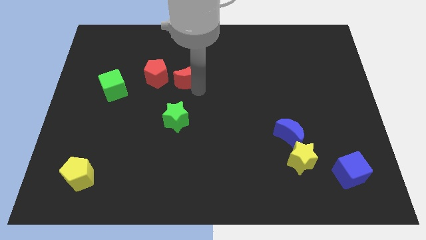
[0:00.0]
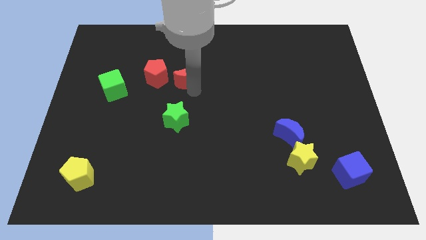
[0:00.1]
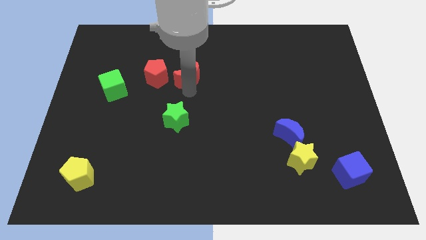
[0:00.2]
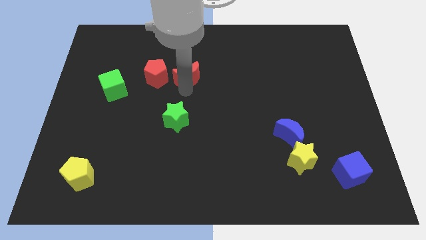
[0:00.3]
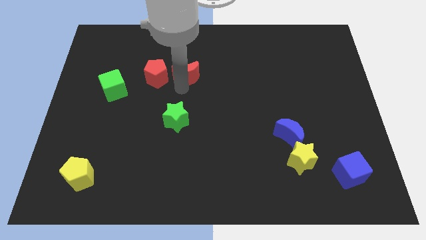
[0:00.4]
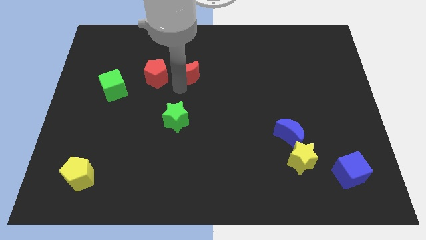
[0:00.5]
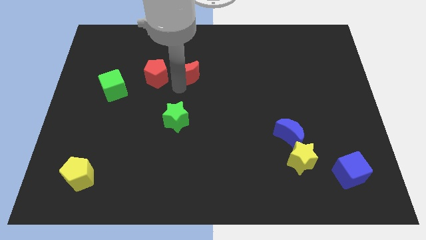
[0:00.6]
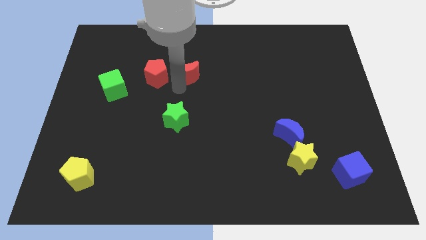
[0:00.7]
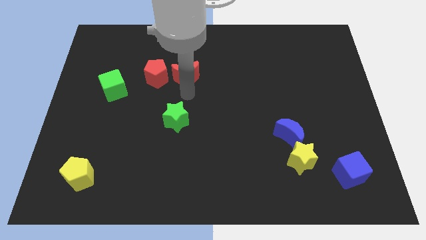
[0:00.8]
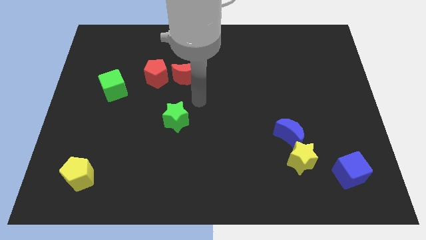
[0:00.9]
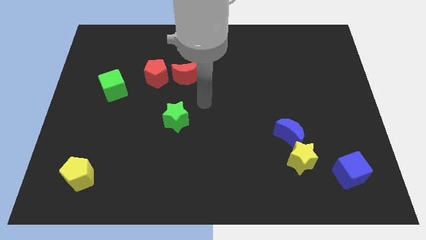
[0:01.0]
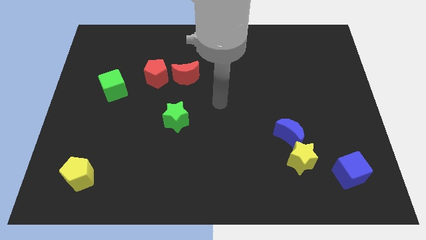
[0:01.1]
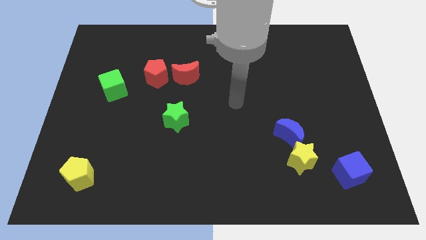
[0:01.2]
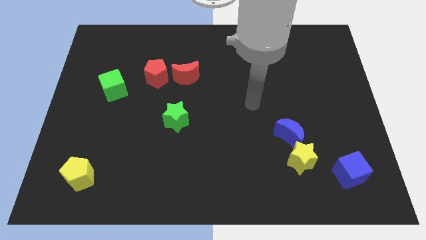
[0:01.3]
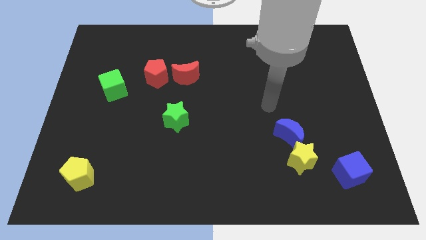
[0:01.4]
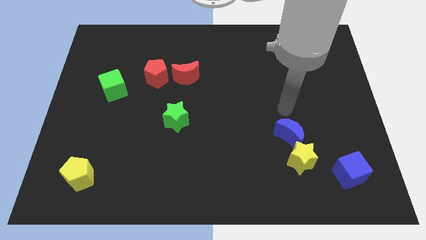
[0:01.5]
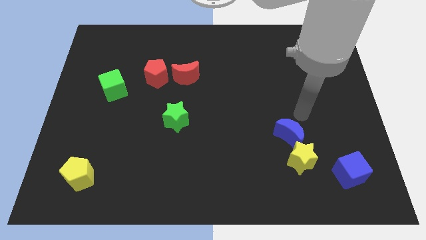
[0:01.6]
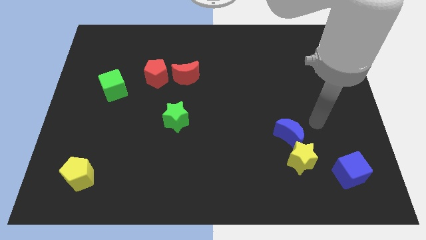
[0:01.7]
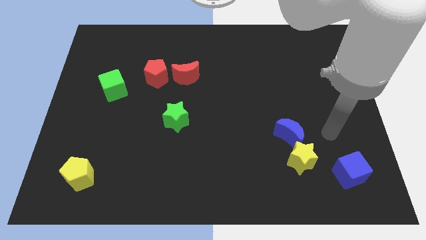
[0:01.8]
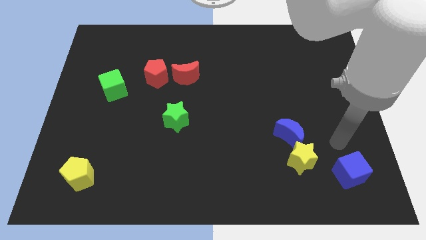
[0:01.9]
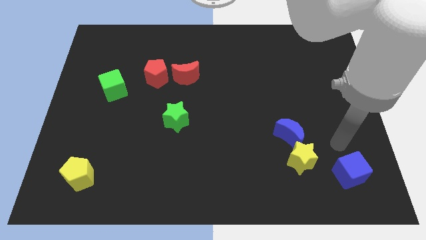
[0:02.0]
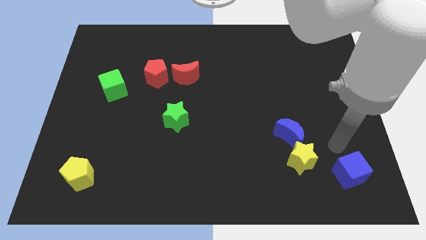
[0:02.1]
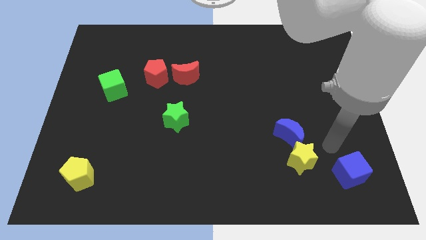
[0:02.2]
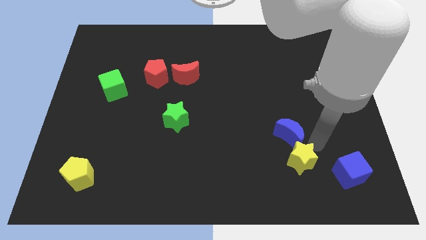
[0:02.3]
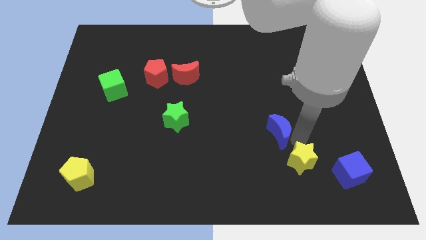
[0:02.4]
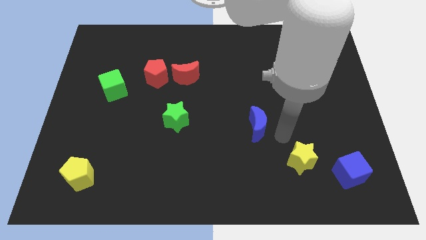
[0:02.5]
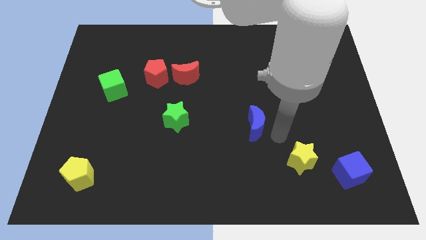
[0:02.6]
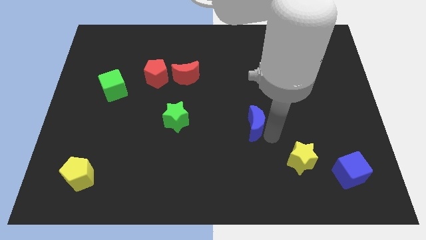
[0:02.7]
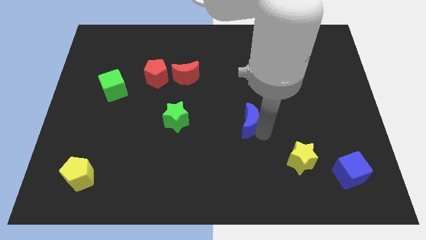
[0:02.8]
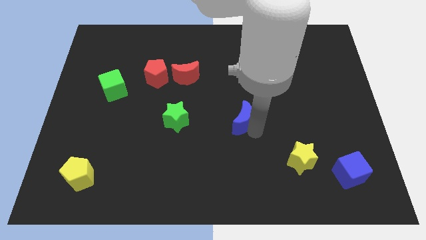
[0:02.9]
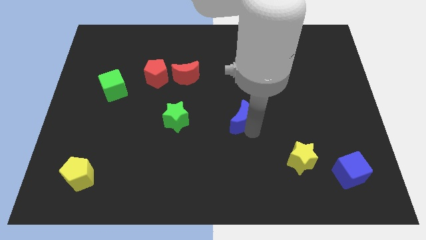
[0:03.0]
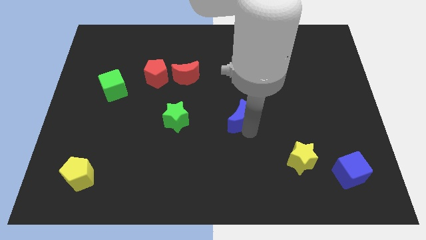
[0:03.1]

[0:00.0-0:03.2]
move the blue crescent parallel to the red crescent

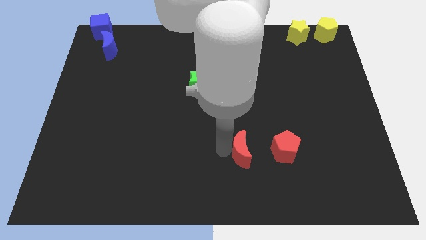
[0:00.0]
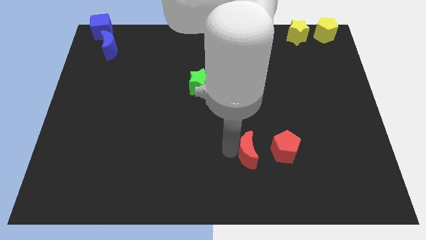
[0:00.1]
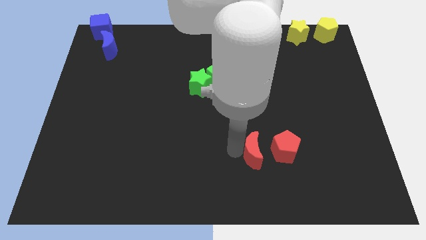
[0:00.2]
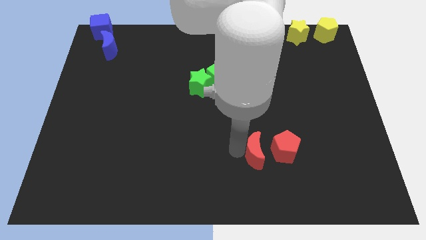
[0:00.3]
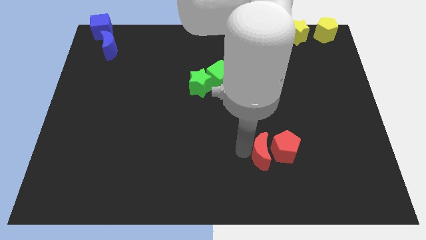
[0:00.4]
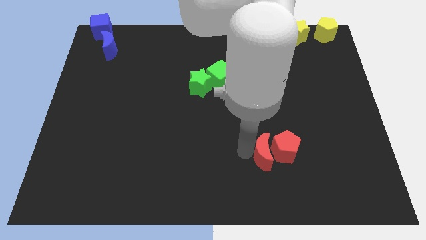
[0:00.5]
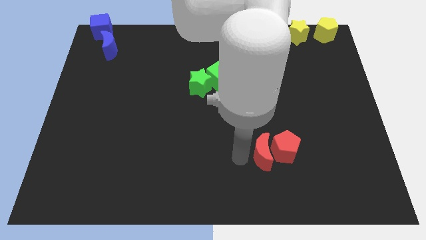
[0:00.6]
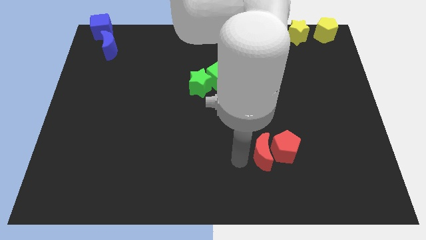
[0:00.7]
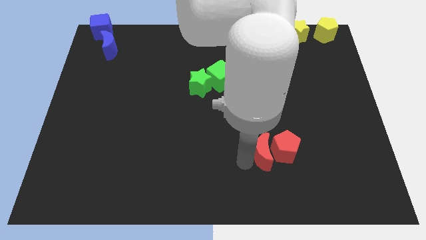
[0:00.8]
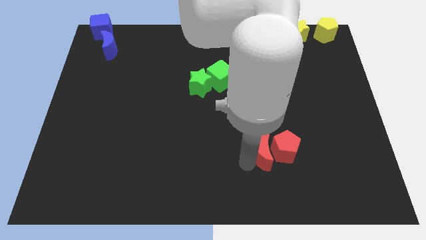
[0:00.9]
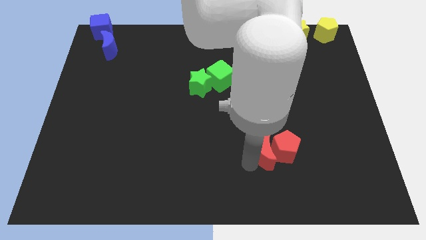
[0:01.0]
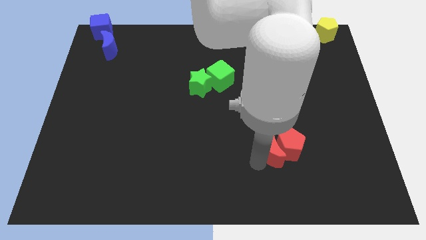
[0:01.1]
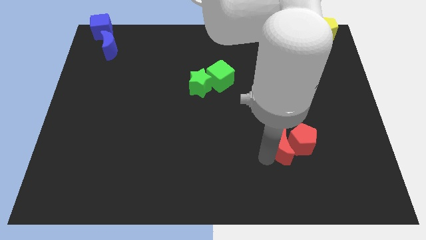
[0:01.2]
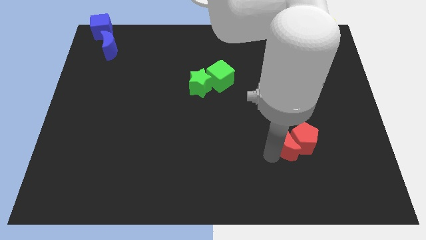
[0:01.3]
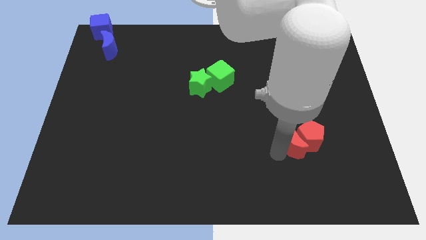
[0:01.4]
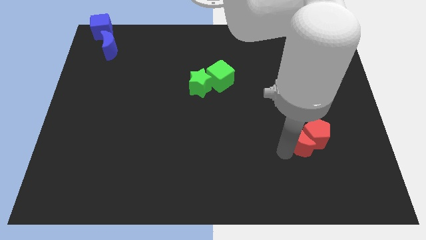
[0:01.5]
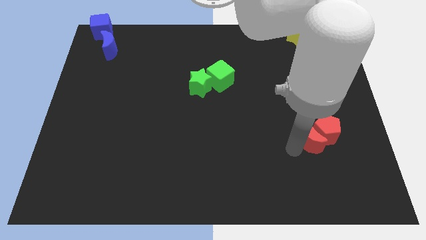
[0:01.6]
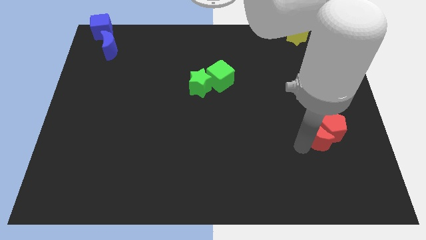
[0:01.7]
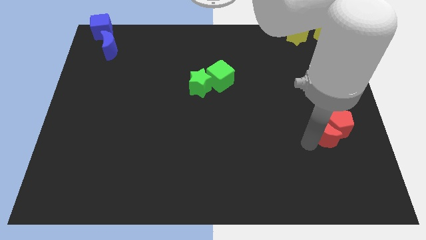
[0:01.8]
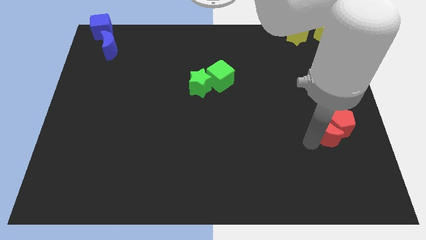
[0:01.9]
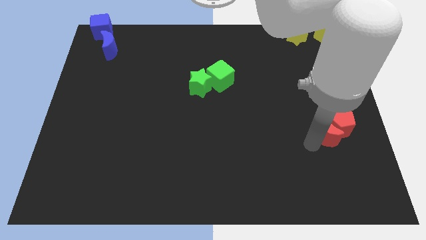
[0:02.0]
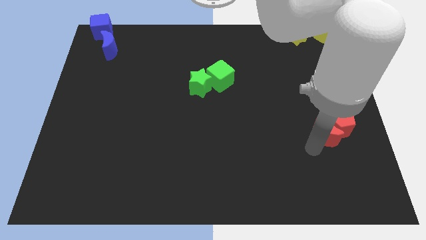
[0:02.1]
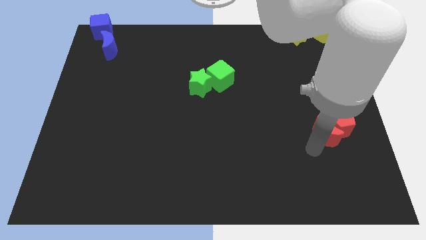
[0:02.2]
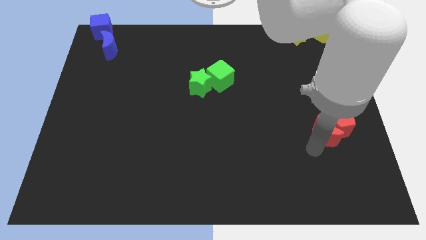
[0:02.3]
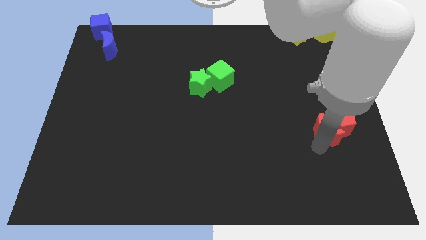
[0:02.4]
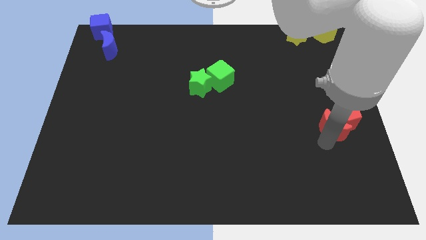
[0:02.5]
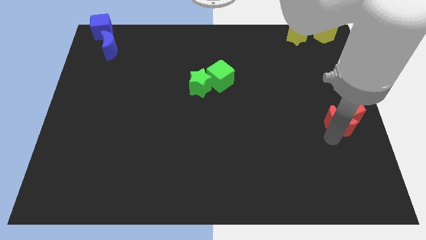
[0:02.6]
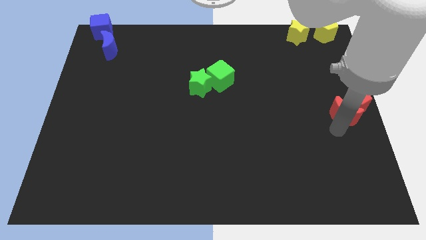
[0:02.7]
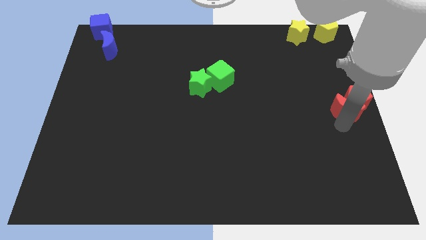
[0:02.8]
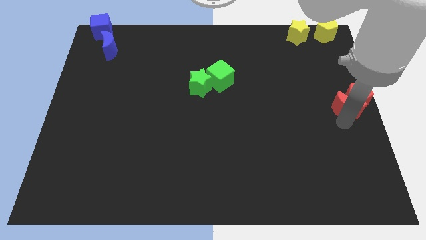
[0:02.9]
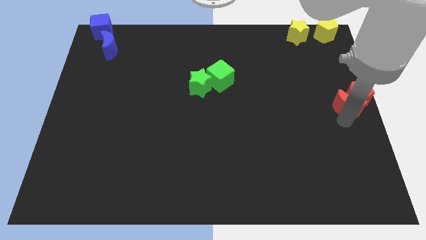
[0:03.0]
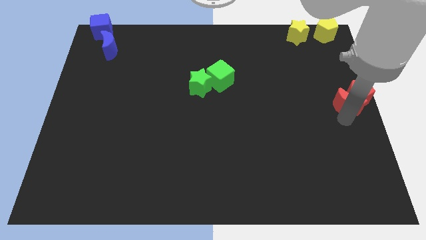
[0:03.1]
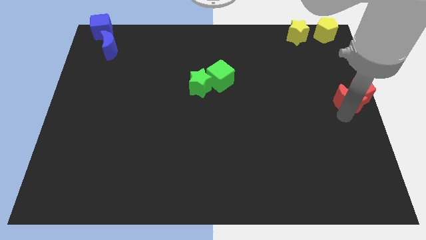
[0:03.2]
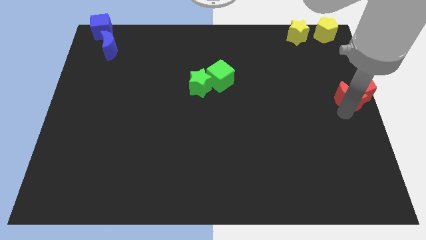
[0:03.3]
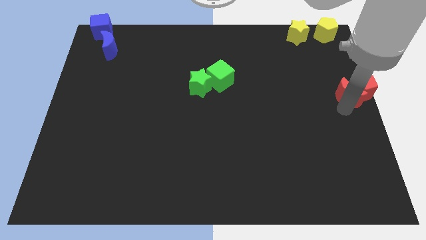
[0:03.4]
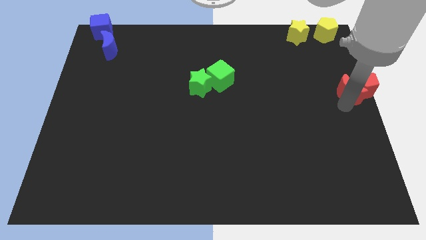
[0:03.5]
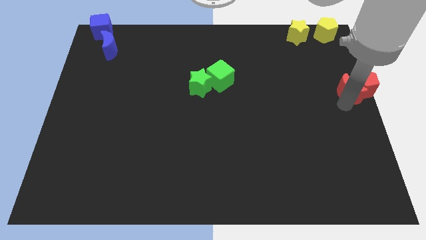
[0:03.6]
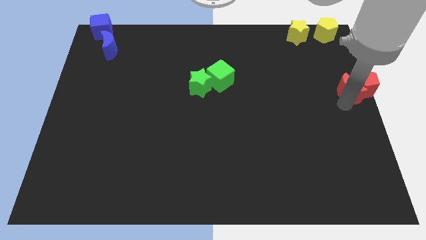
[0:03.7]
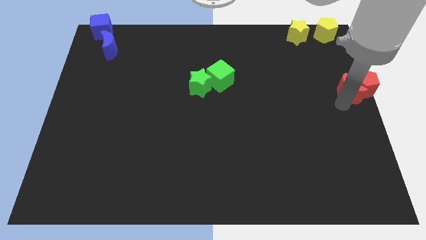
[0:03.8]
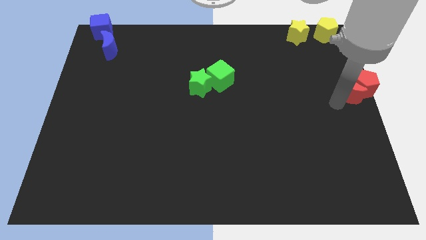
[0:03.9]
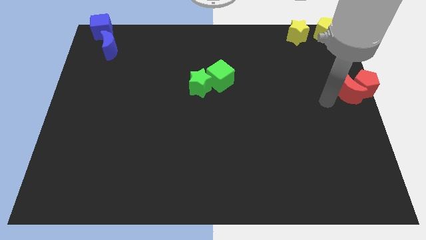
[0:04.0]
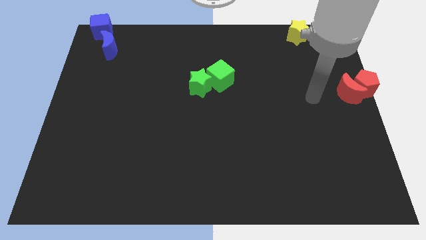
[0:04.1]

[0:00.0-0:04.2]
move the red crescent along with the red pentagon to the center right of the board

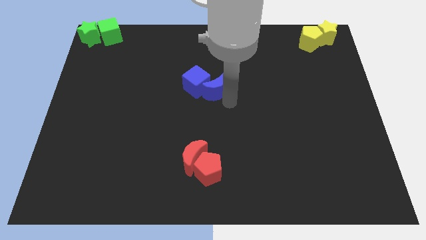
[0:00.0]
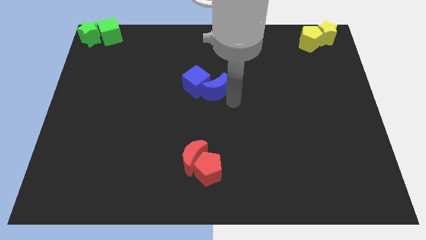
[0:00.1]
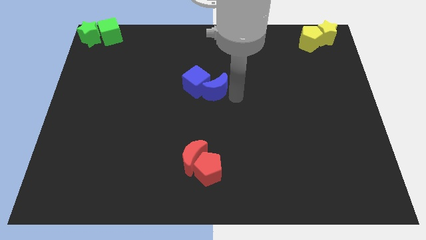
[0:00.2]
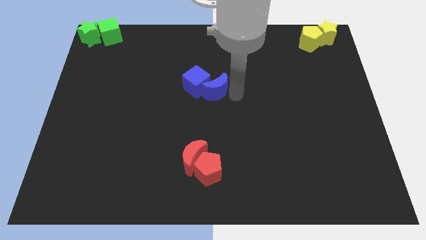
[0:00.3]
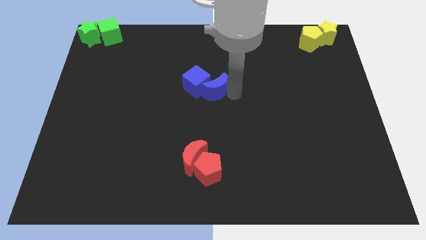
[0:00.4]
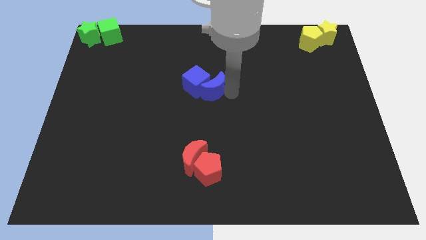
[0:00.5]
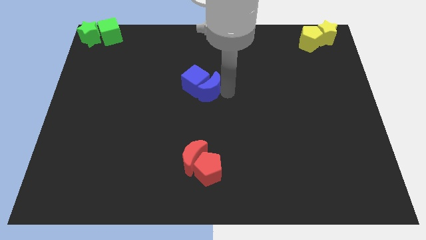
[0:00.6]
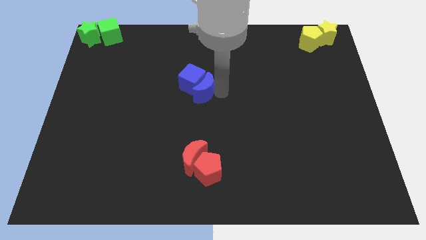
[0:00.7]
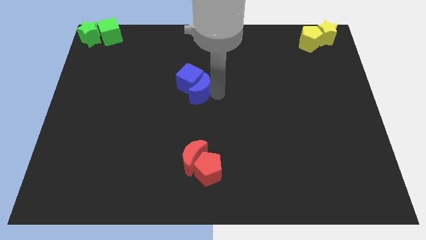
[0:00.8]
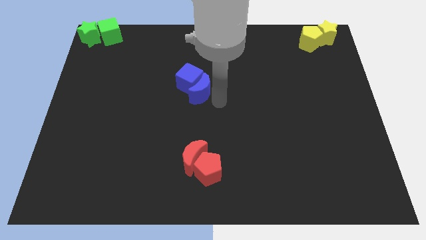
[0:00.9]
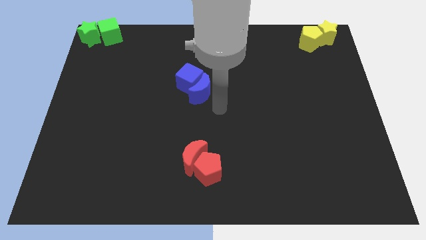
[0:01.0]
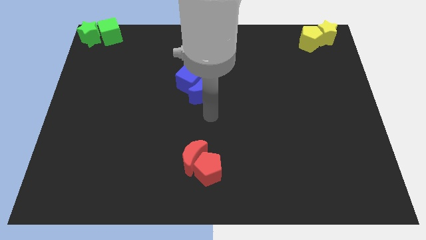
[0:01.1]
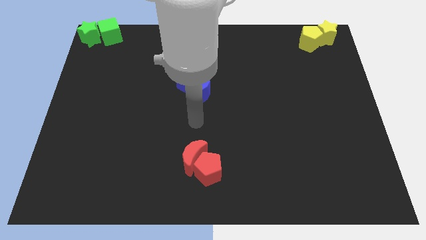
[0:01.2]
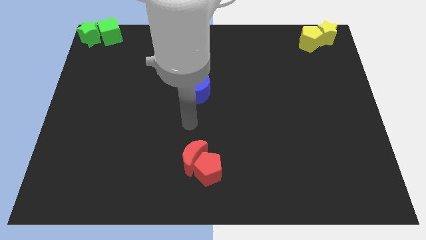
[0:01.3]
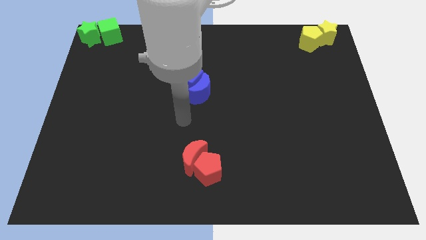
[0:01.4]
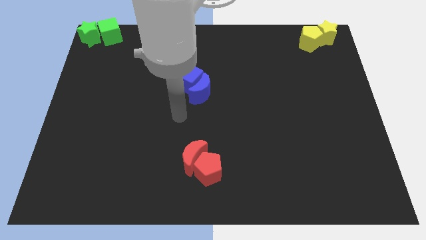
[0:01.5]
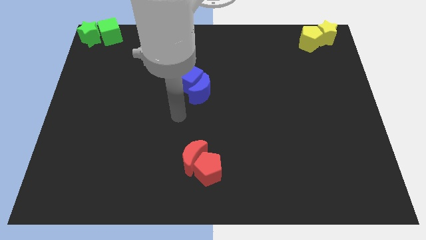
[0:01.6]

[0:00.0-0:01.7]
move blue cube and crescent slightly to the center
